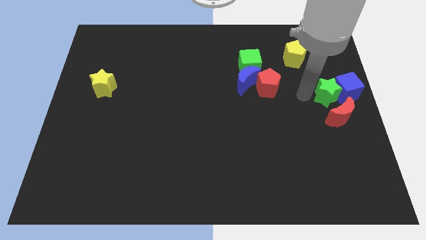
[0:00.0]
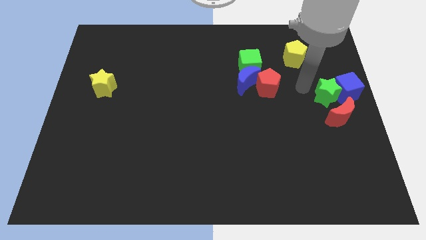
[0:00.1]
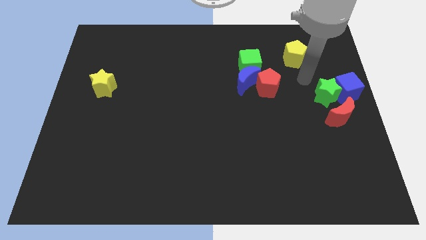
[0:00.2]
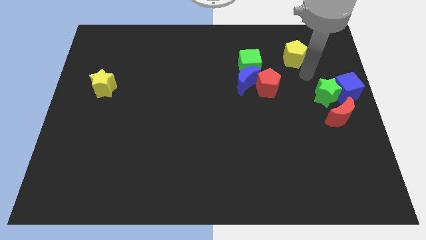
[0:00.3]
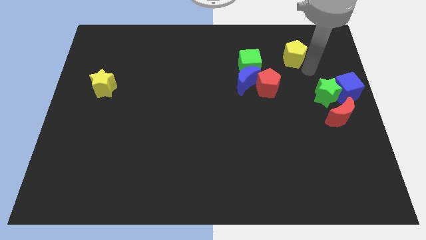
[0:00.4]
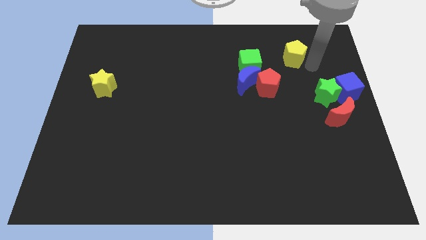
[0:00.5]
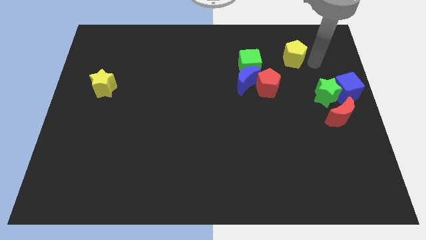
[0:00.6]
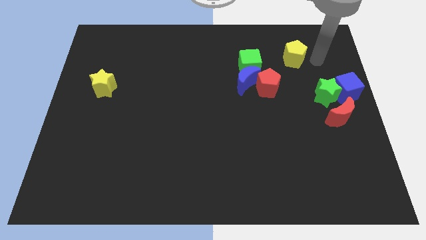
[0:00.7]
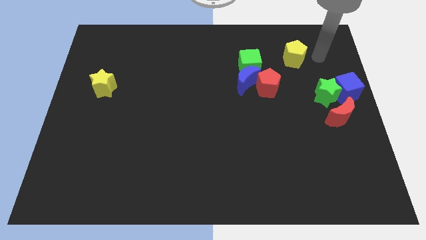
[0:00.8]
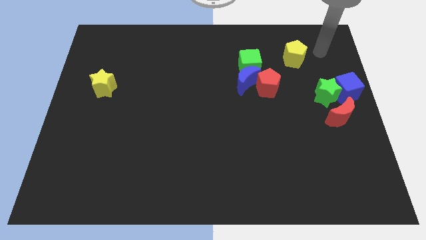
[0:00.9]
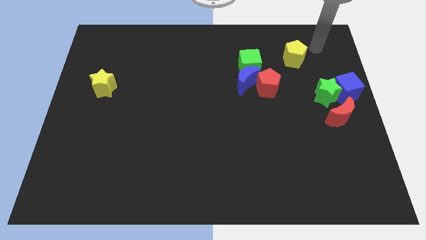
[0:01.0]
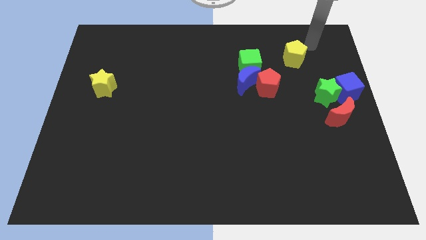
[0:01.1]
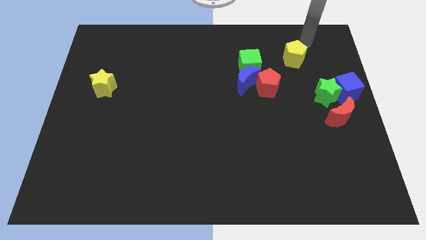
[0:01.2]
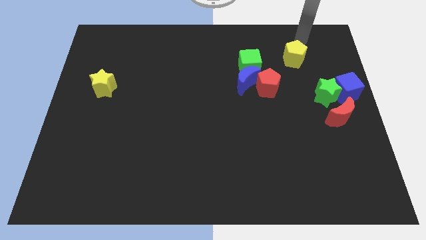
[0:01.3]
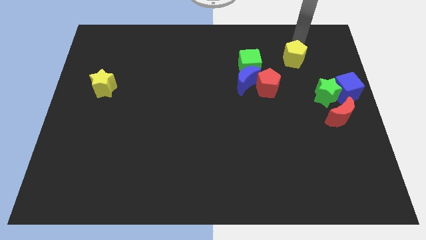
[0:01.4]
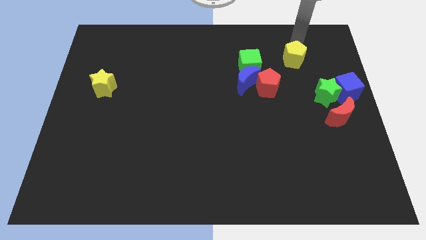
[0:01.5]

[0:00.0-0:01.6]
go and place your arm close to the yellow pentagon

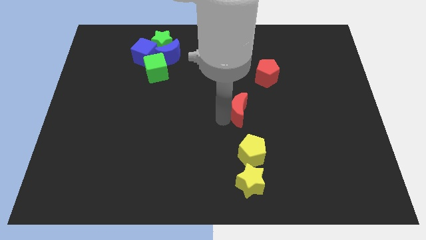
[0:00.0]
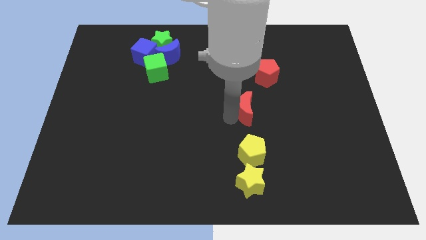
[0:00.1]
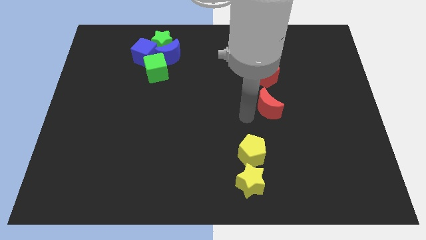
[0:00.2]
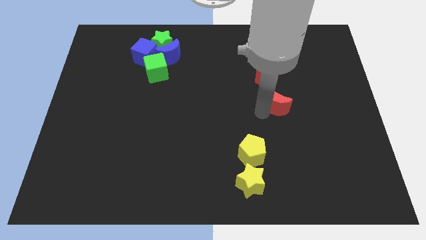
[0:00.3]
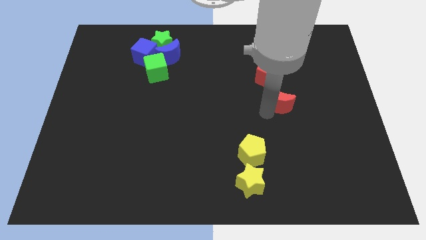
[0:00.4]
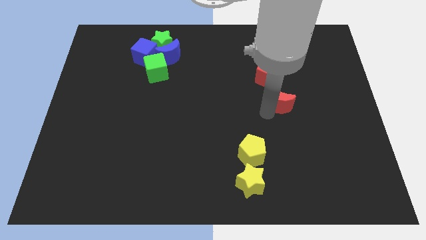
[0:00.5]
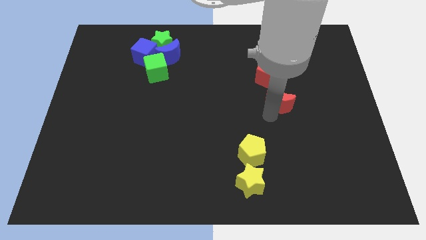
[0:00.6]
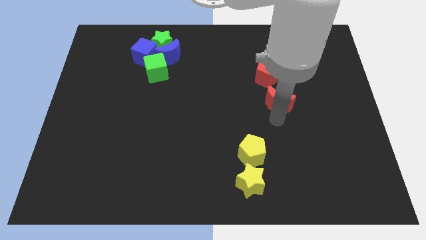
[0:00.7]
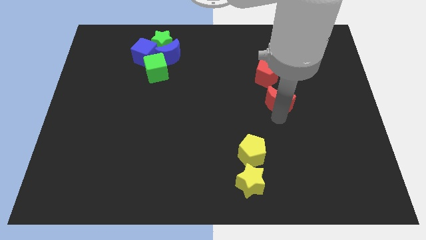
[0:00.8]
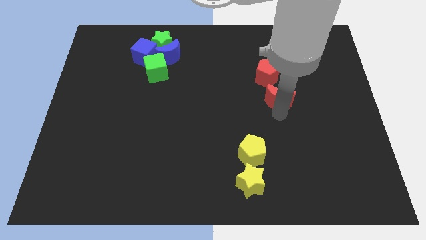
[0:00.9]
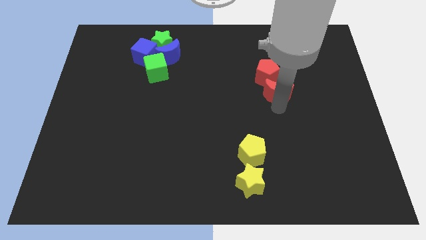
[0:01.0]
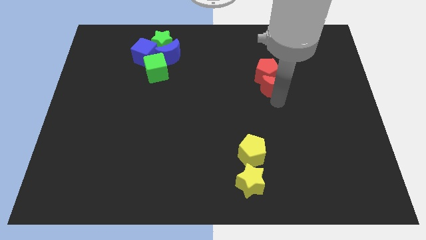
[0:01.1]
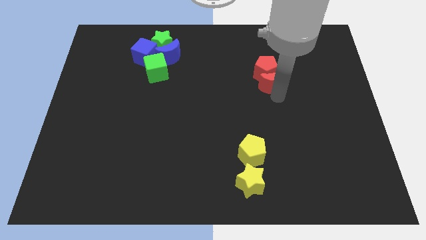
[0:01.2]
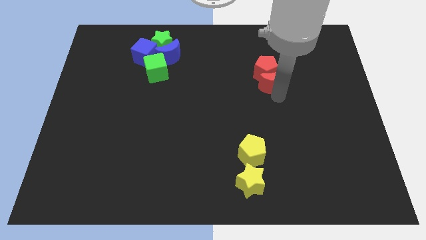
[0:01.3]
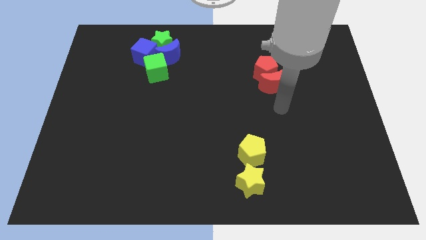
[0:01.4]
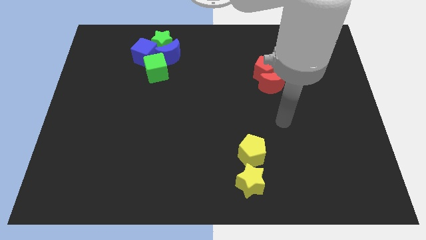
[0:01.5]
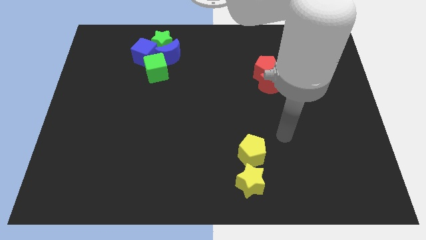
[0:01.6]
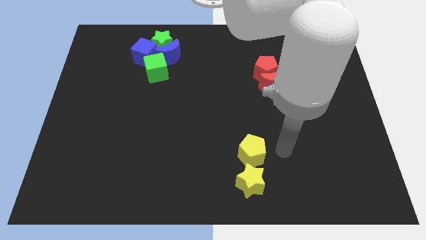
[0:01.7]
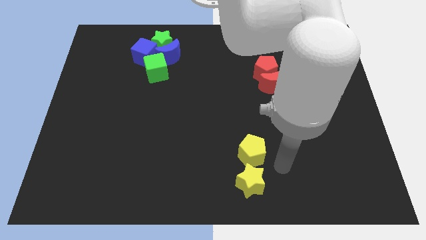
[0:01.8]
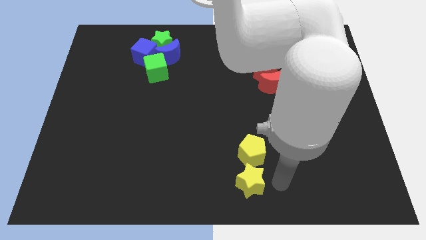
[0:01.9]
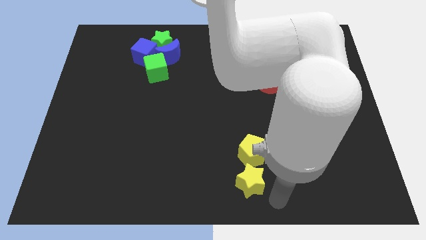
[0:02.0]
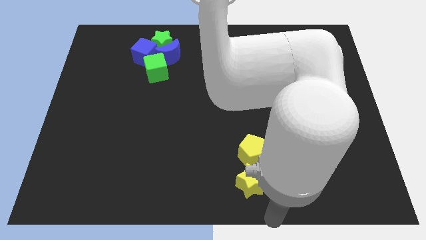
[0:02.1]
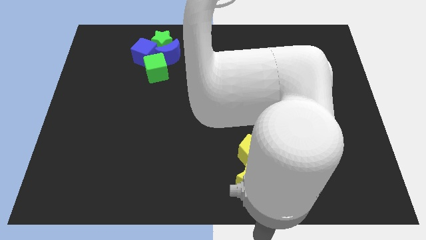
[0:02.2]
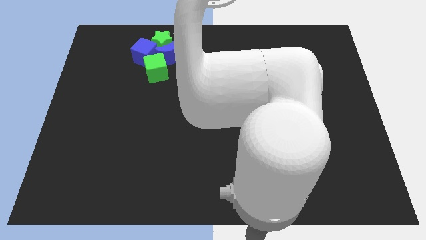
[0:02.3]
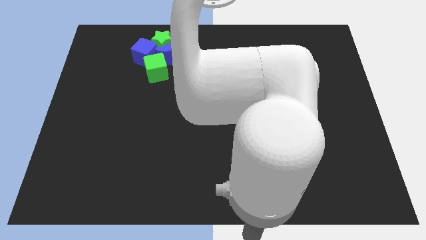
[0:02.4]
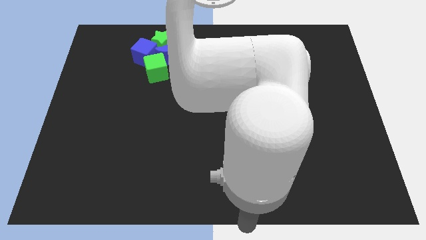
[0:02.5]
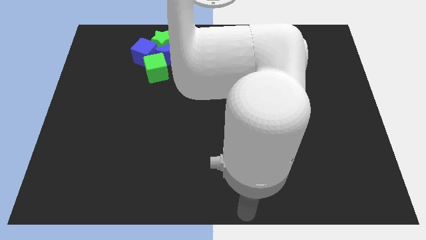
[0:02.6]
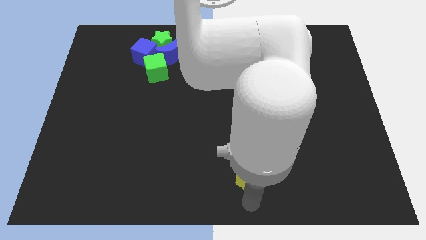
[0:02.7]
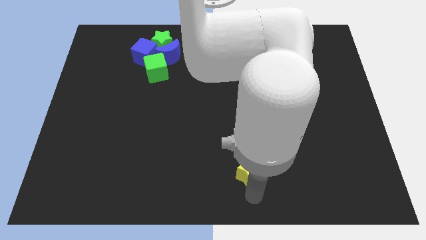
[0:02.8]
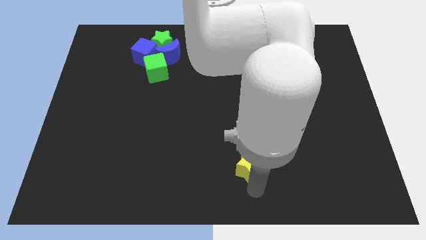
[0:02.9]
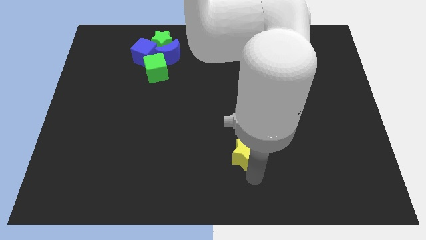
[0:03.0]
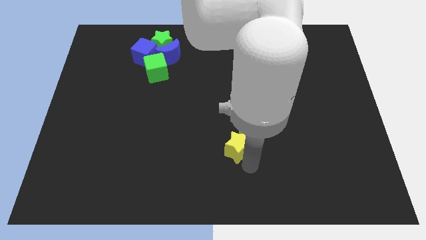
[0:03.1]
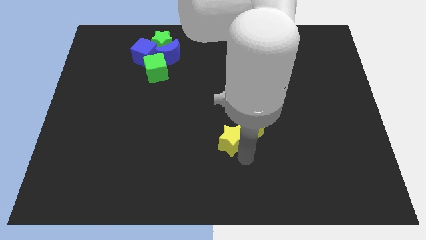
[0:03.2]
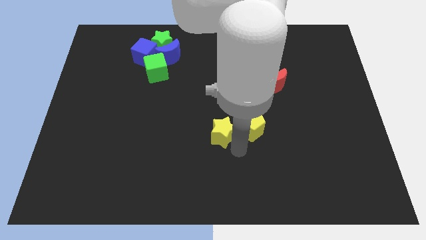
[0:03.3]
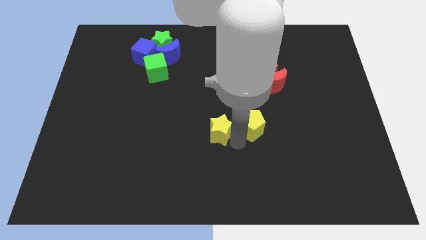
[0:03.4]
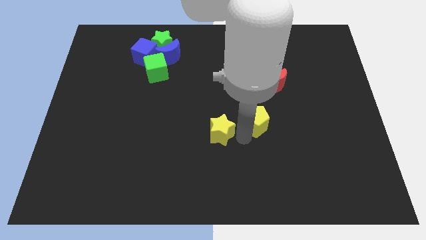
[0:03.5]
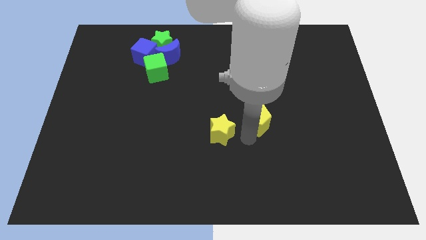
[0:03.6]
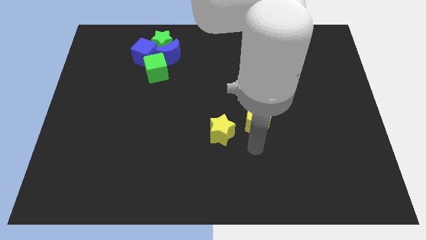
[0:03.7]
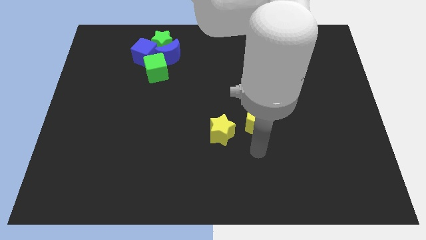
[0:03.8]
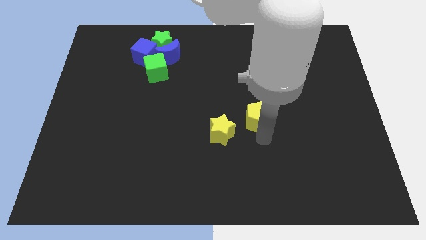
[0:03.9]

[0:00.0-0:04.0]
move the yellow pentagon towards the red blocks

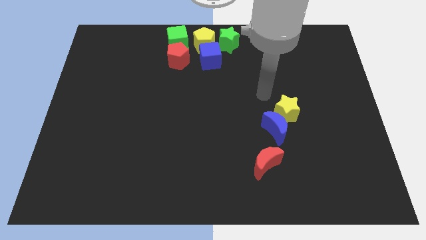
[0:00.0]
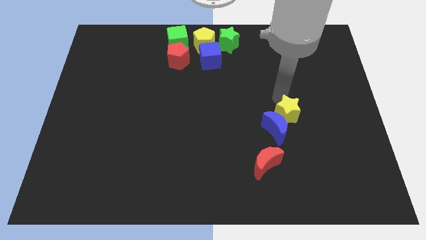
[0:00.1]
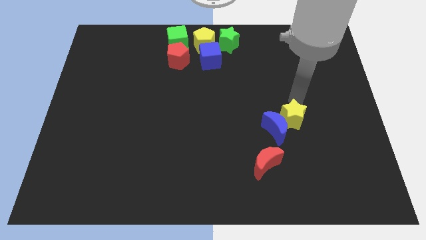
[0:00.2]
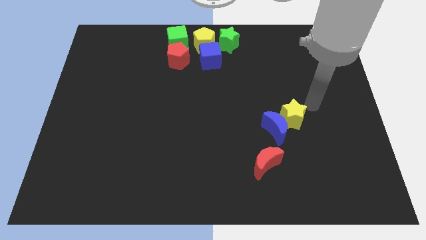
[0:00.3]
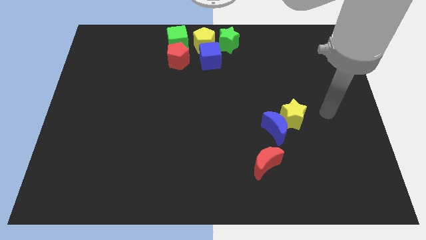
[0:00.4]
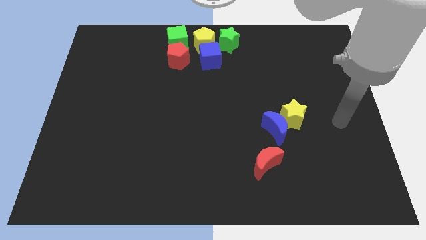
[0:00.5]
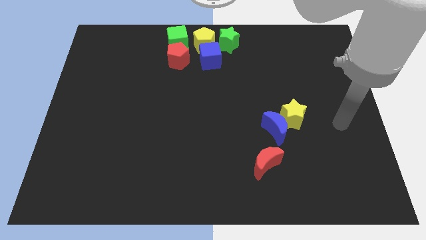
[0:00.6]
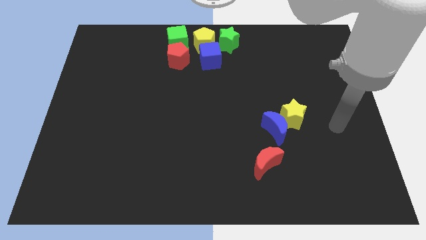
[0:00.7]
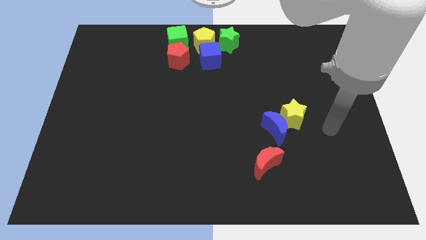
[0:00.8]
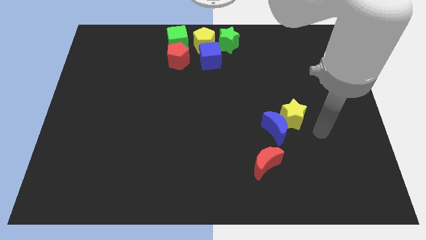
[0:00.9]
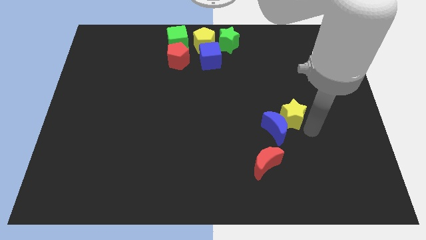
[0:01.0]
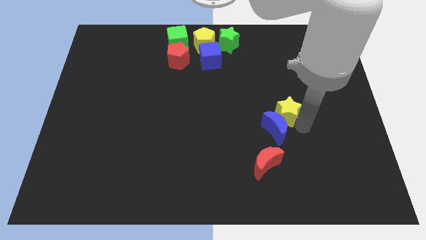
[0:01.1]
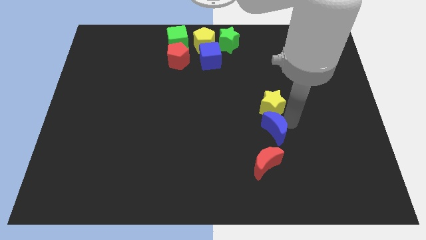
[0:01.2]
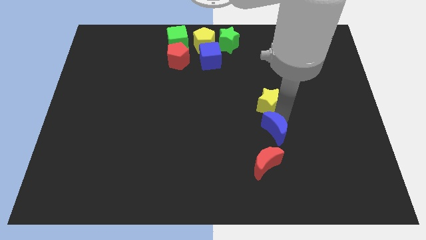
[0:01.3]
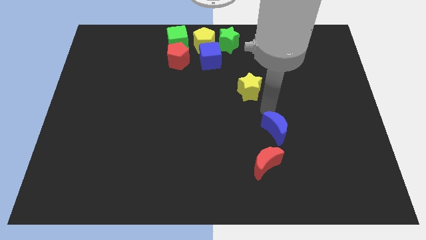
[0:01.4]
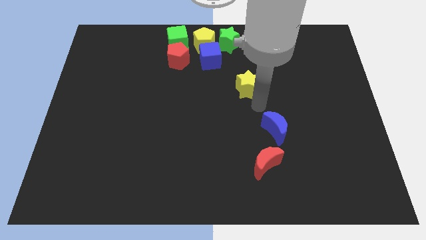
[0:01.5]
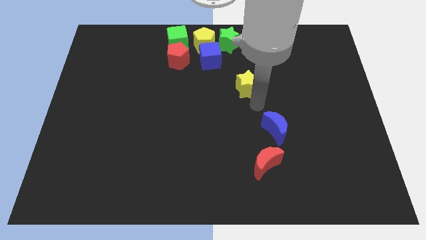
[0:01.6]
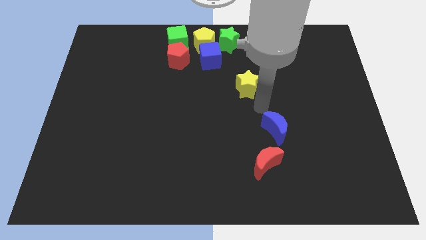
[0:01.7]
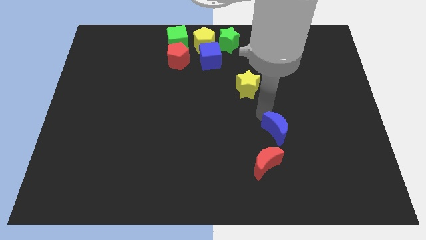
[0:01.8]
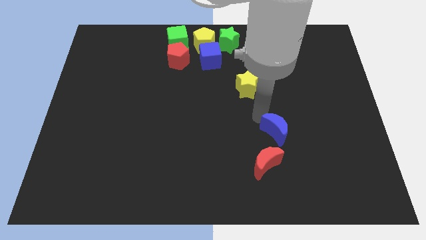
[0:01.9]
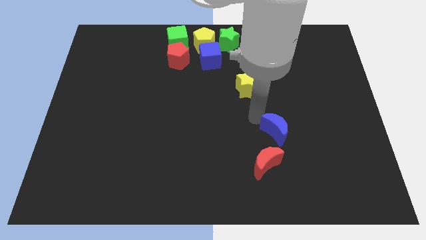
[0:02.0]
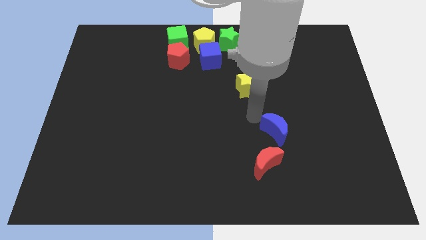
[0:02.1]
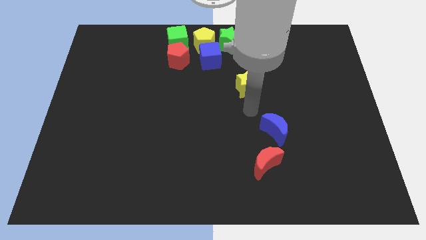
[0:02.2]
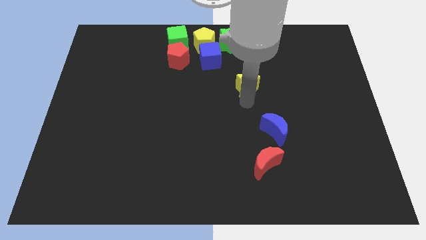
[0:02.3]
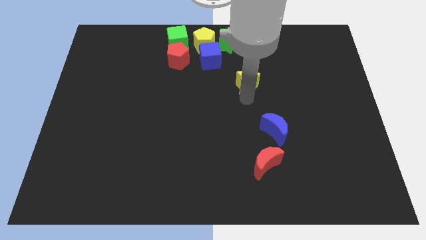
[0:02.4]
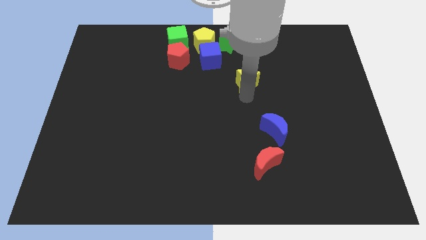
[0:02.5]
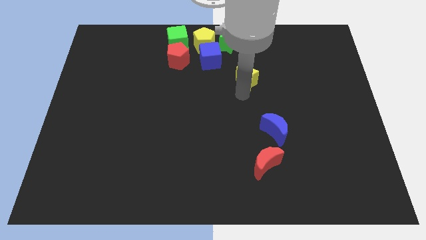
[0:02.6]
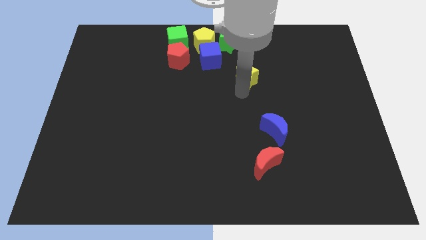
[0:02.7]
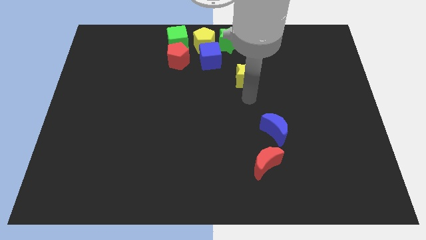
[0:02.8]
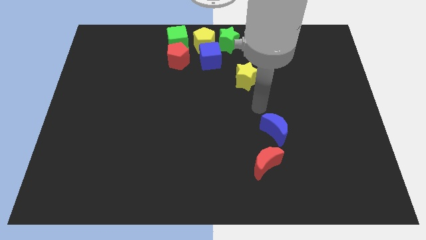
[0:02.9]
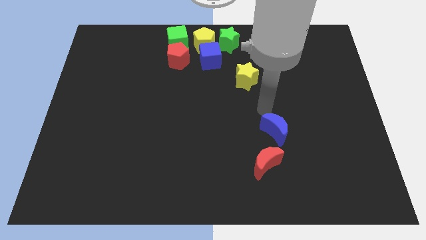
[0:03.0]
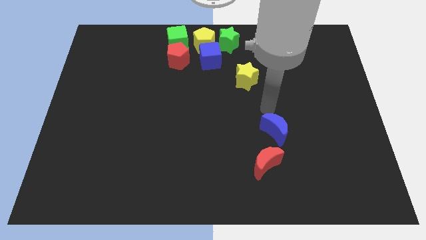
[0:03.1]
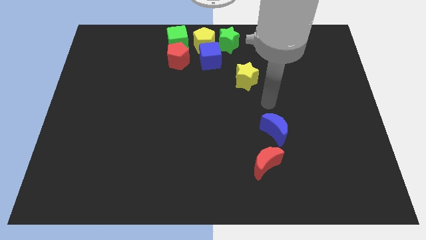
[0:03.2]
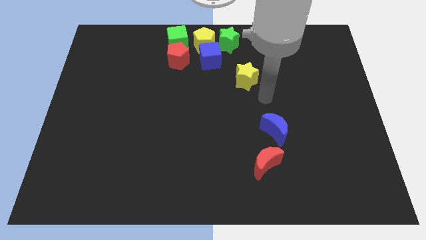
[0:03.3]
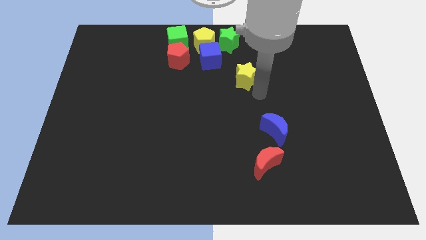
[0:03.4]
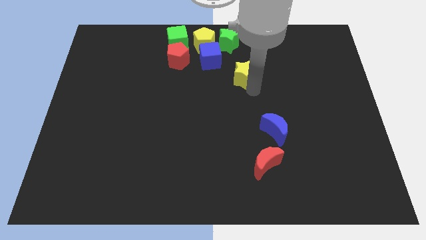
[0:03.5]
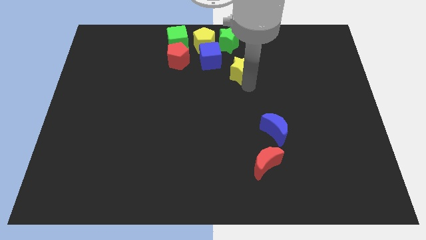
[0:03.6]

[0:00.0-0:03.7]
drag the yellow star towards the green star
